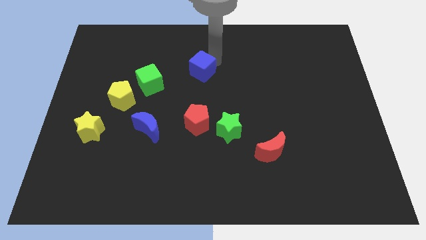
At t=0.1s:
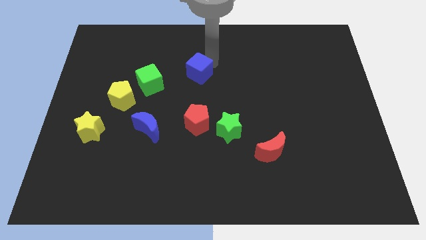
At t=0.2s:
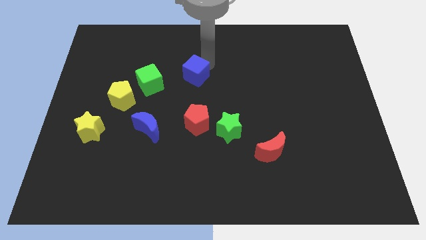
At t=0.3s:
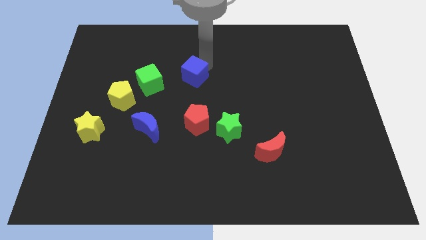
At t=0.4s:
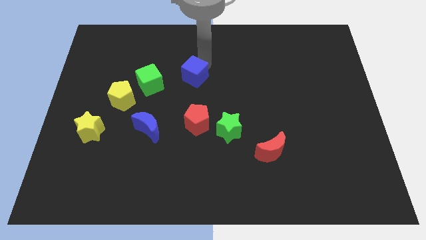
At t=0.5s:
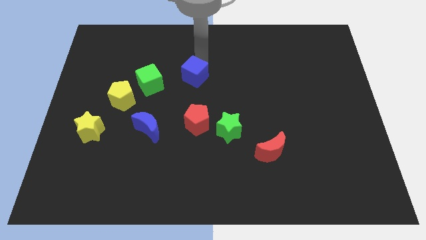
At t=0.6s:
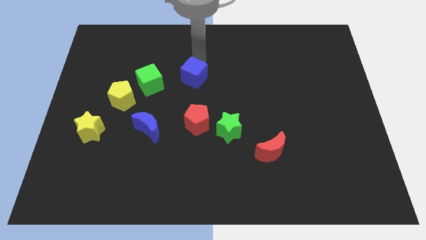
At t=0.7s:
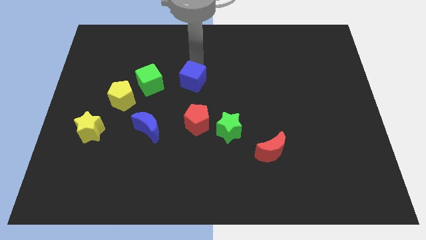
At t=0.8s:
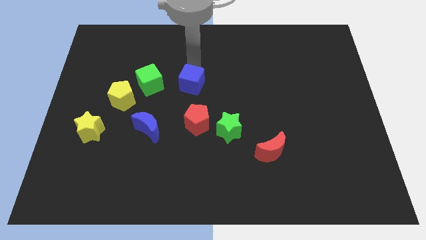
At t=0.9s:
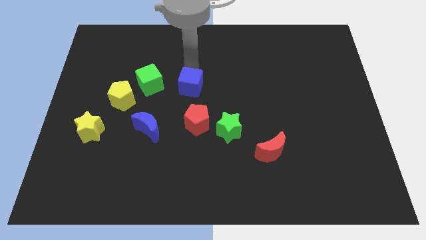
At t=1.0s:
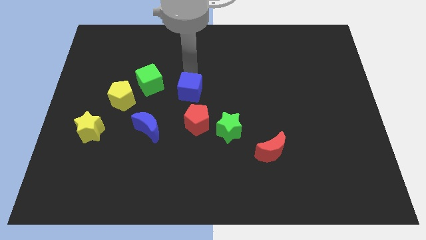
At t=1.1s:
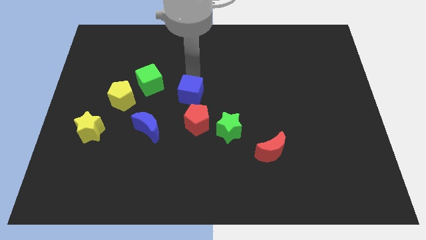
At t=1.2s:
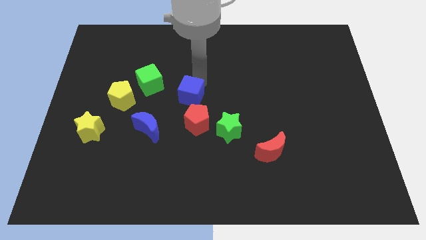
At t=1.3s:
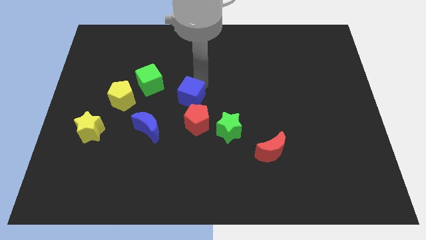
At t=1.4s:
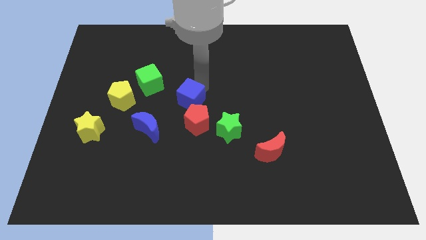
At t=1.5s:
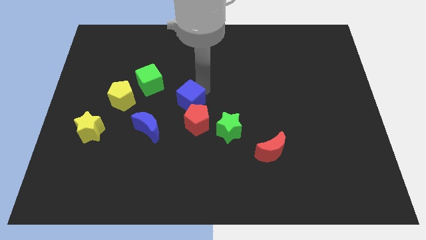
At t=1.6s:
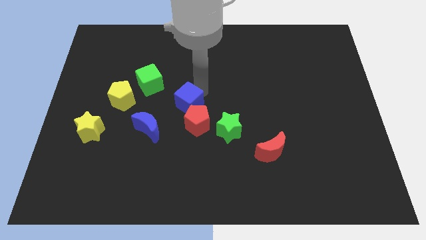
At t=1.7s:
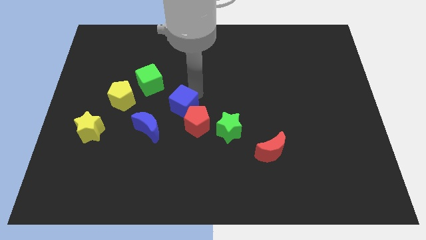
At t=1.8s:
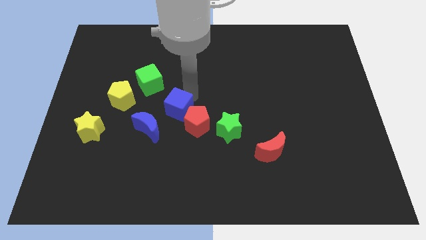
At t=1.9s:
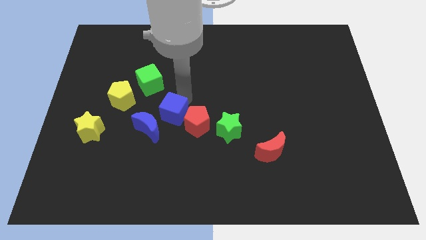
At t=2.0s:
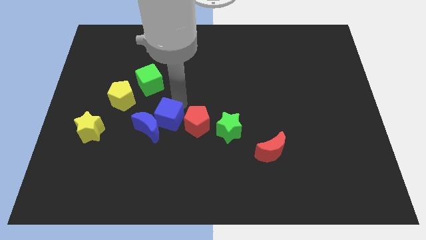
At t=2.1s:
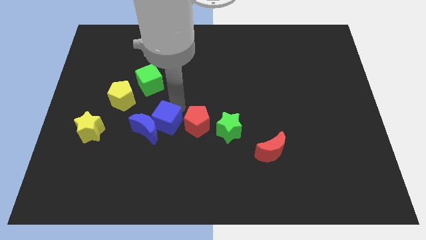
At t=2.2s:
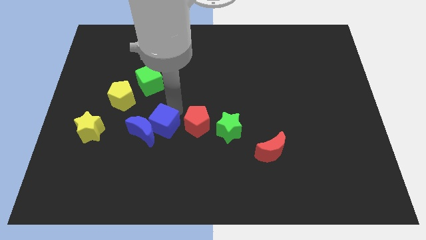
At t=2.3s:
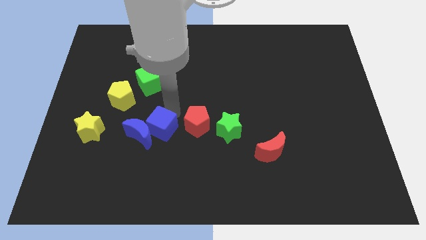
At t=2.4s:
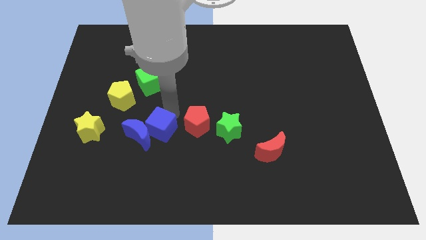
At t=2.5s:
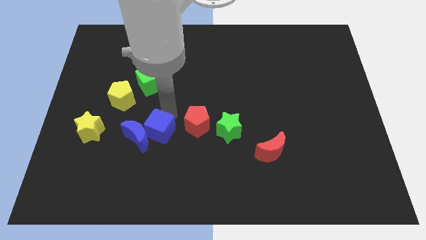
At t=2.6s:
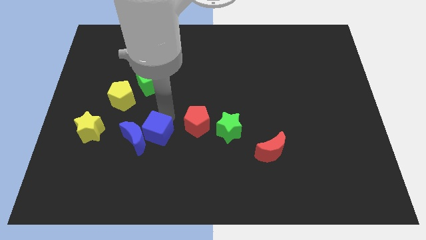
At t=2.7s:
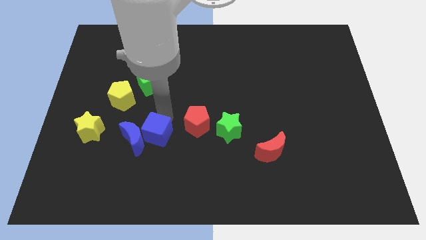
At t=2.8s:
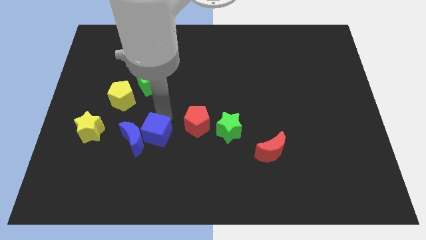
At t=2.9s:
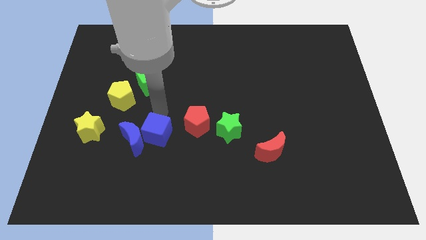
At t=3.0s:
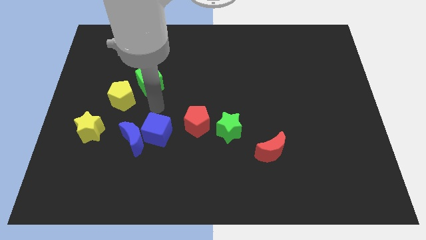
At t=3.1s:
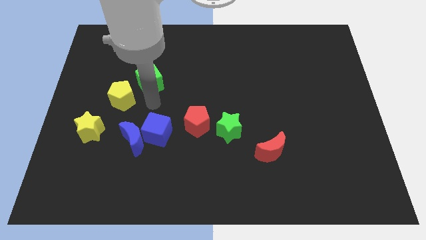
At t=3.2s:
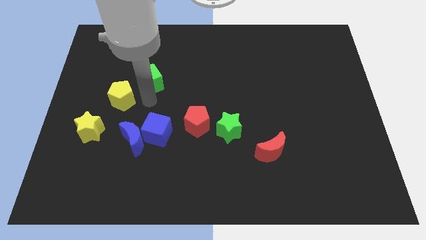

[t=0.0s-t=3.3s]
push blue cube into the blue moon

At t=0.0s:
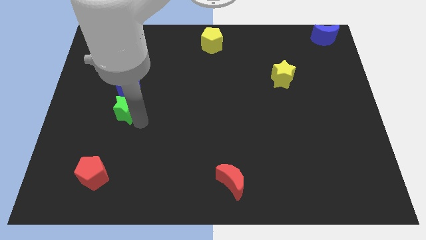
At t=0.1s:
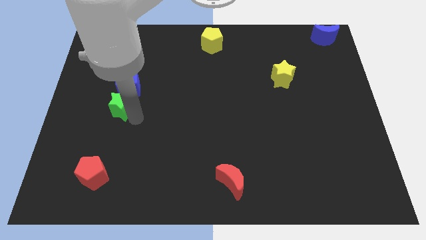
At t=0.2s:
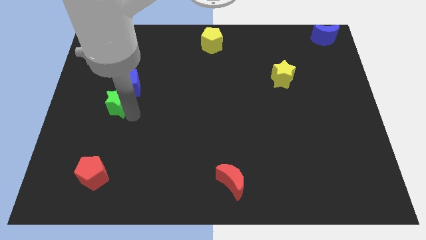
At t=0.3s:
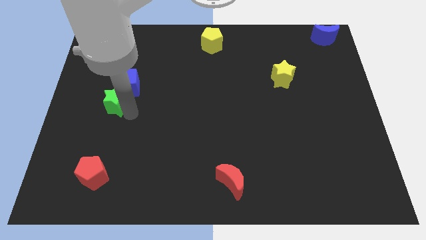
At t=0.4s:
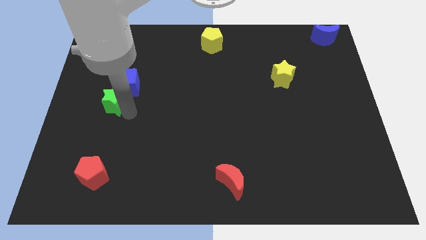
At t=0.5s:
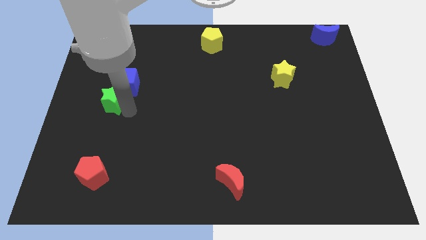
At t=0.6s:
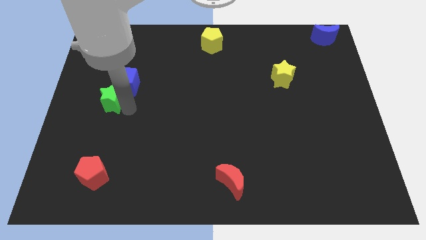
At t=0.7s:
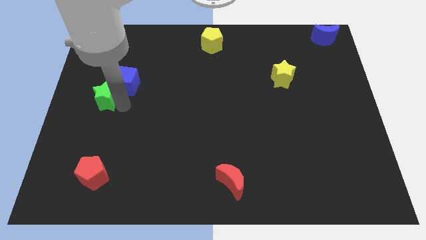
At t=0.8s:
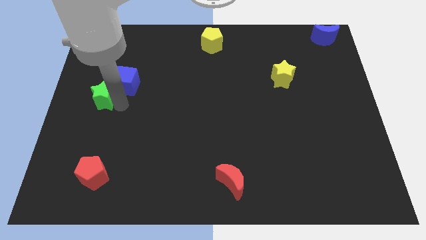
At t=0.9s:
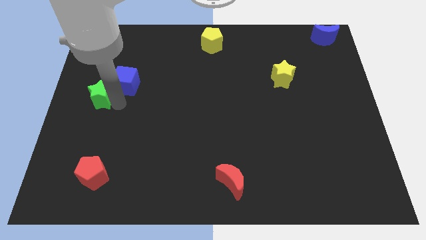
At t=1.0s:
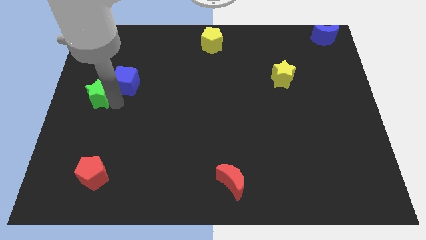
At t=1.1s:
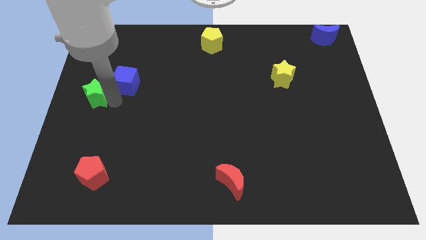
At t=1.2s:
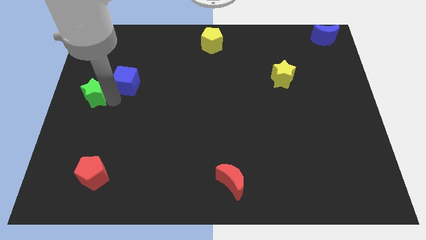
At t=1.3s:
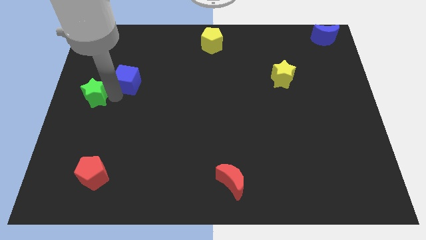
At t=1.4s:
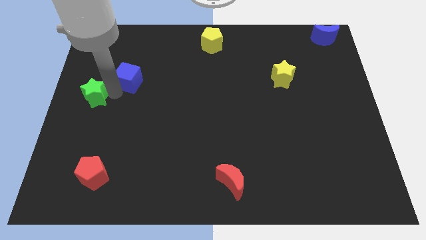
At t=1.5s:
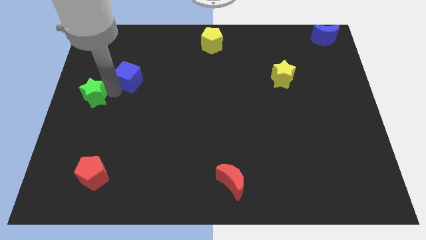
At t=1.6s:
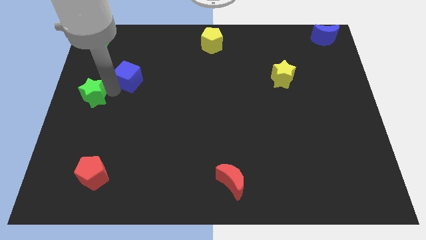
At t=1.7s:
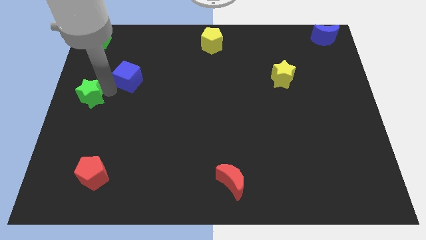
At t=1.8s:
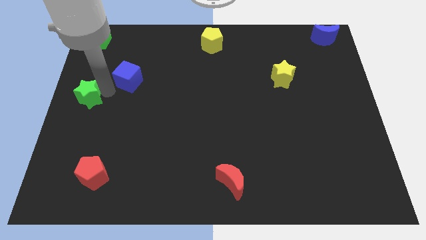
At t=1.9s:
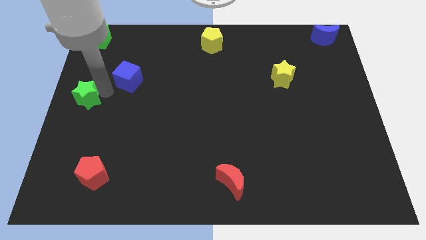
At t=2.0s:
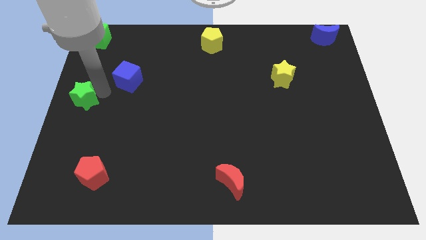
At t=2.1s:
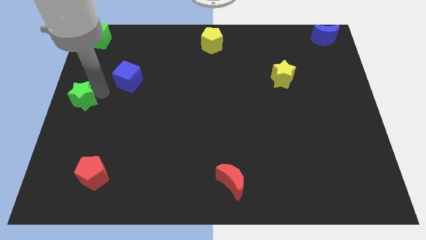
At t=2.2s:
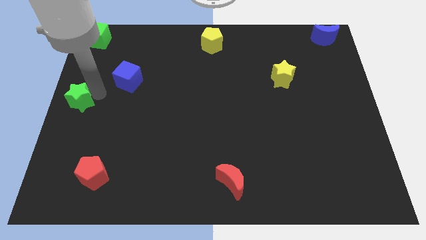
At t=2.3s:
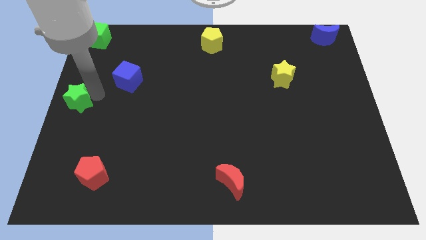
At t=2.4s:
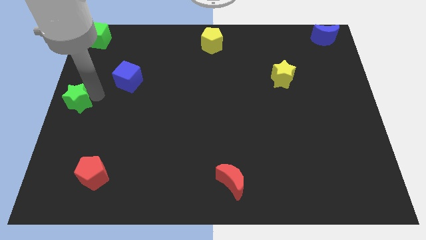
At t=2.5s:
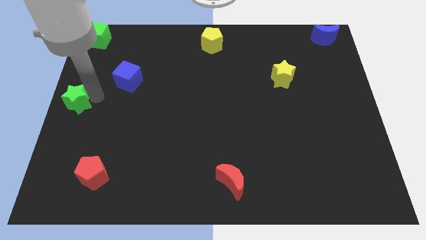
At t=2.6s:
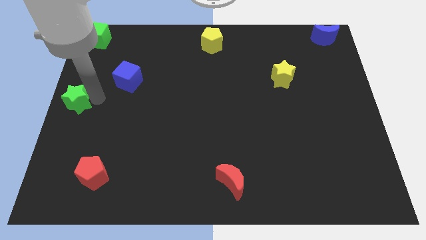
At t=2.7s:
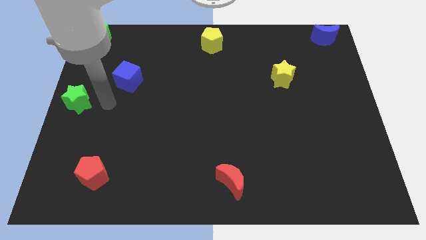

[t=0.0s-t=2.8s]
place the green star at the left center of the board

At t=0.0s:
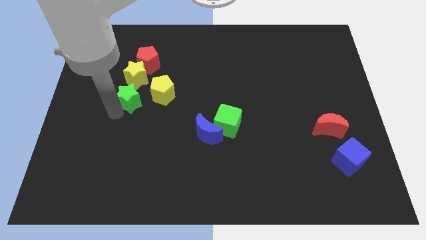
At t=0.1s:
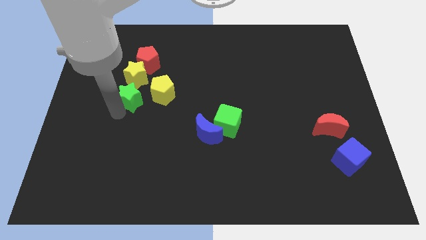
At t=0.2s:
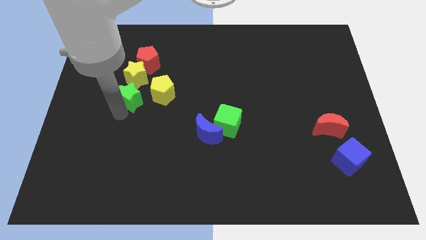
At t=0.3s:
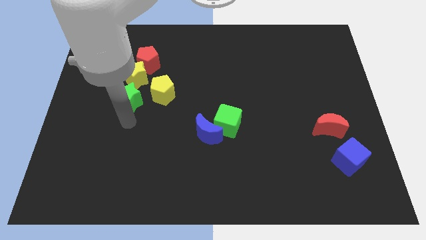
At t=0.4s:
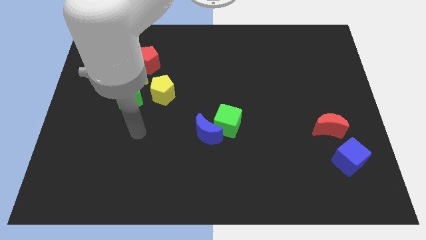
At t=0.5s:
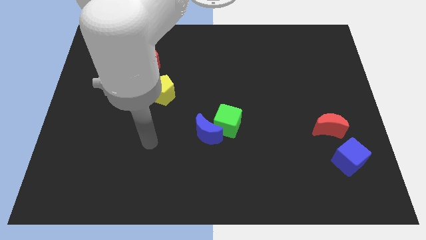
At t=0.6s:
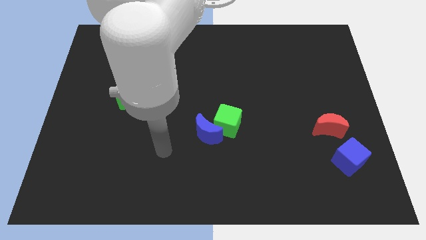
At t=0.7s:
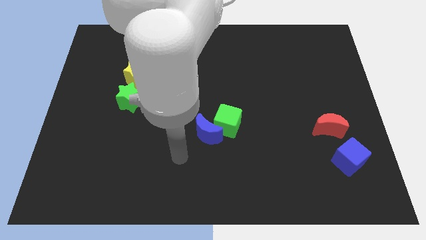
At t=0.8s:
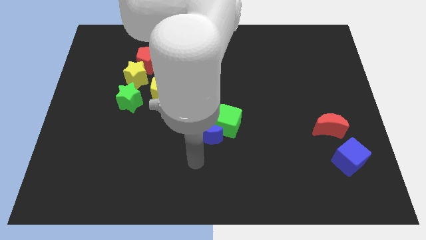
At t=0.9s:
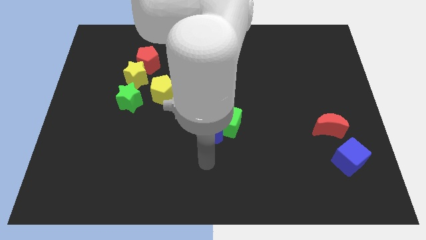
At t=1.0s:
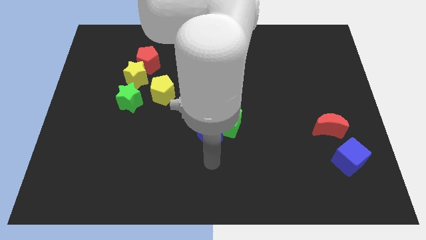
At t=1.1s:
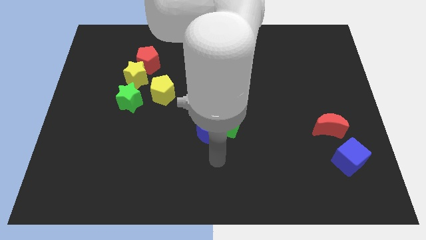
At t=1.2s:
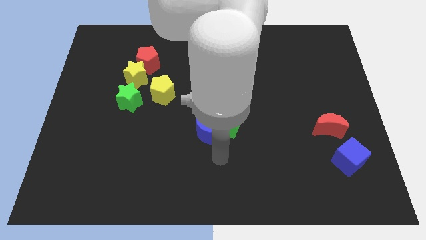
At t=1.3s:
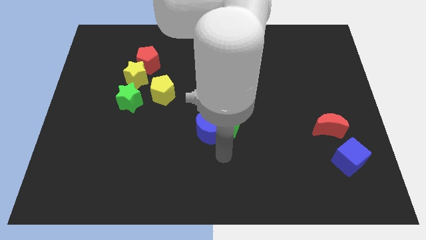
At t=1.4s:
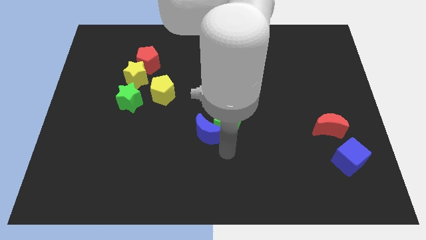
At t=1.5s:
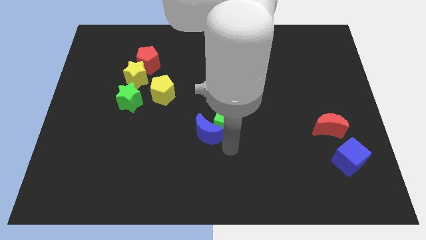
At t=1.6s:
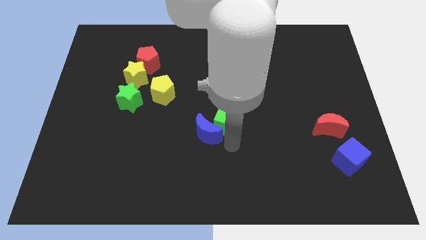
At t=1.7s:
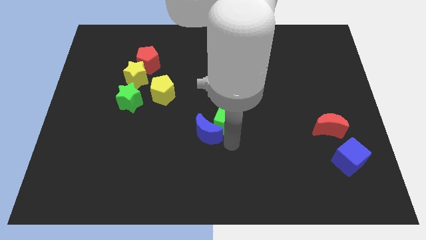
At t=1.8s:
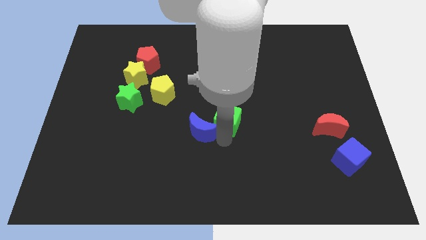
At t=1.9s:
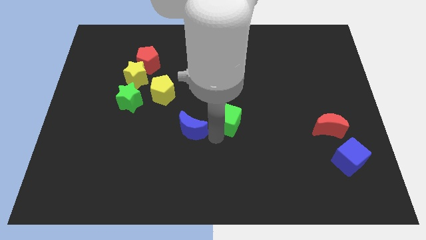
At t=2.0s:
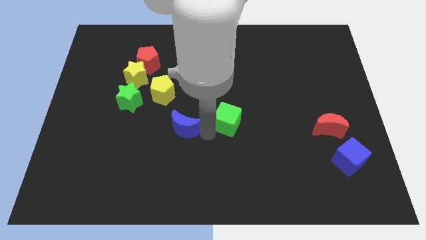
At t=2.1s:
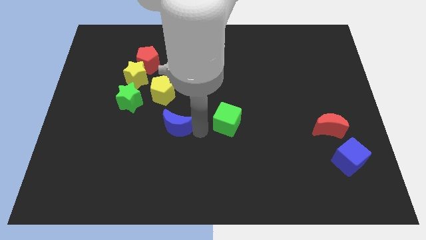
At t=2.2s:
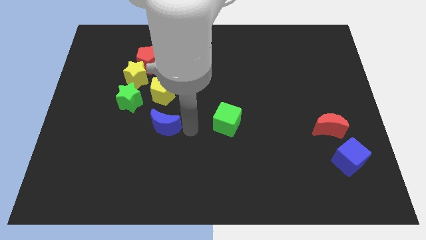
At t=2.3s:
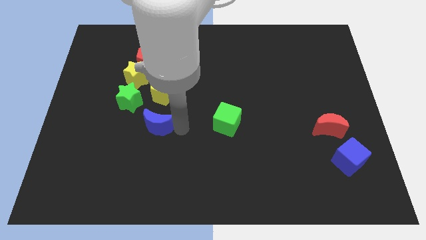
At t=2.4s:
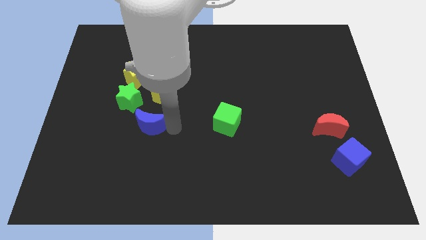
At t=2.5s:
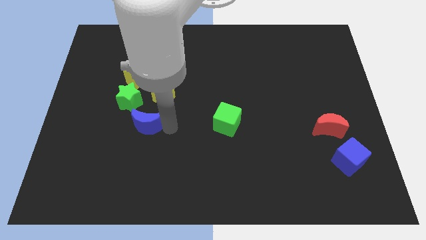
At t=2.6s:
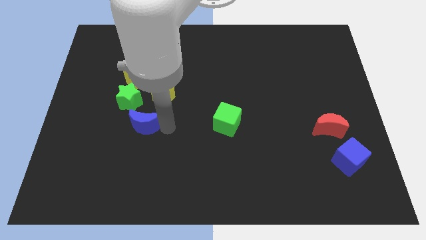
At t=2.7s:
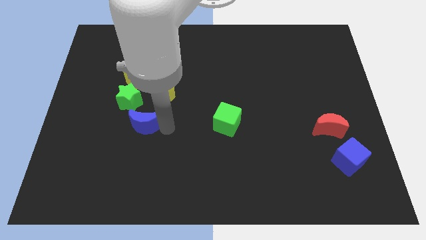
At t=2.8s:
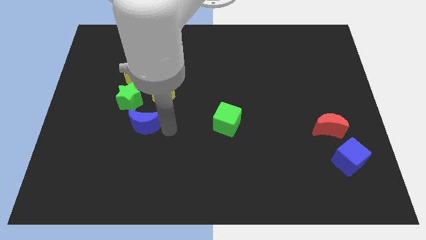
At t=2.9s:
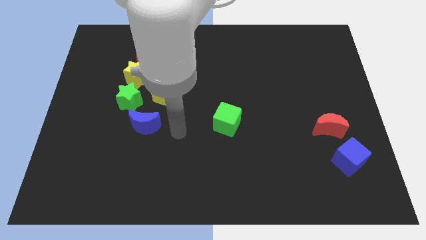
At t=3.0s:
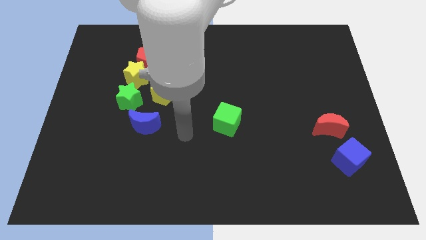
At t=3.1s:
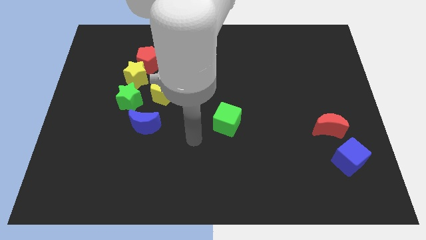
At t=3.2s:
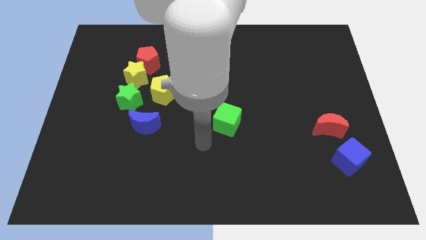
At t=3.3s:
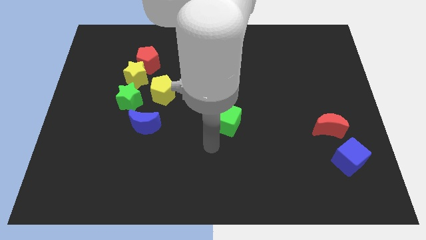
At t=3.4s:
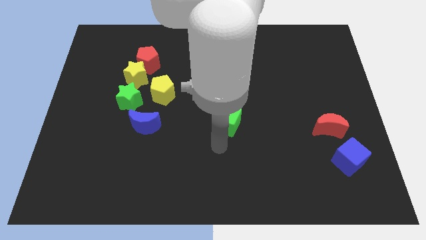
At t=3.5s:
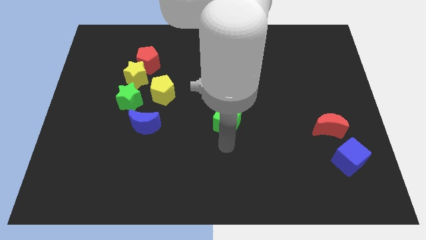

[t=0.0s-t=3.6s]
separate the blue moon from the green cube
